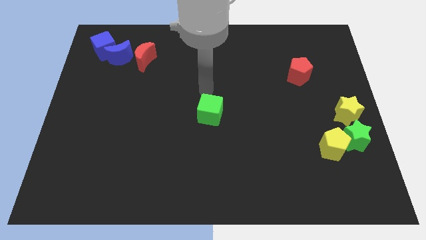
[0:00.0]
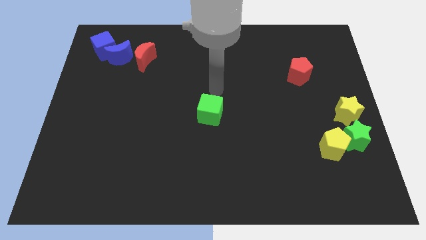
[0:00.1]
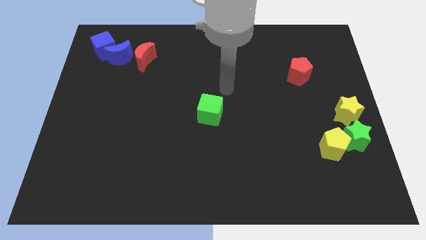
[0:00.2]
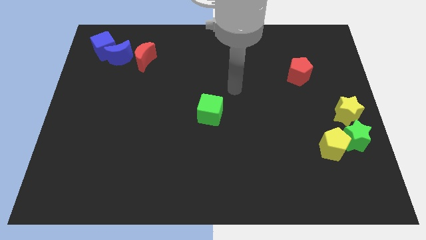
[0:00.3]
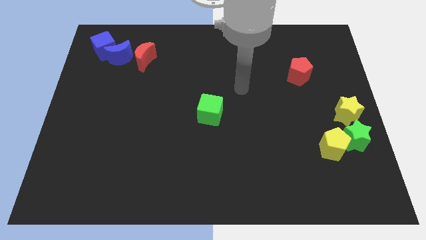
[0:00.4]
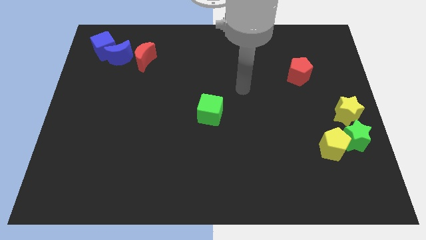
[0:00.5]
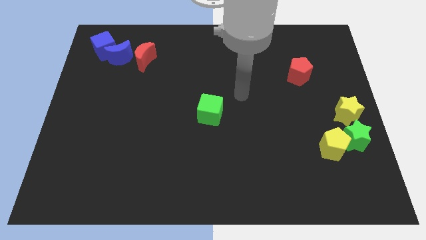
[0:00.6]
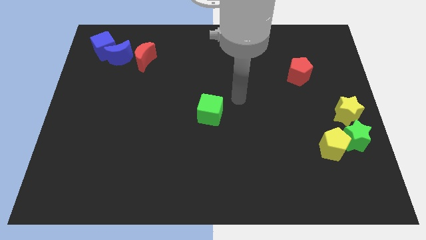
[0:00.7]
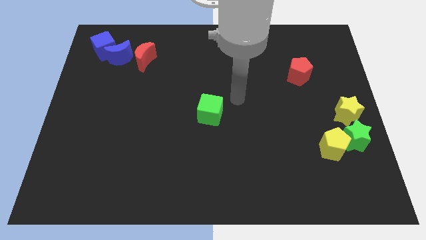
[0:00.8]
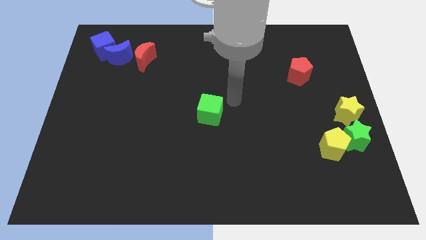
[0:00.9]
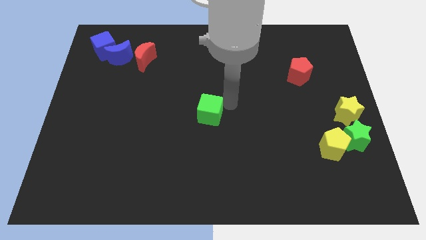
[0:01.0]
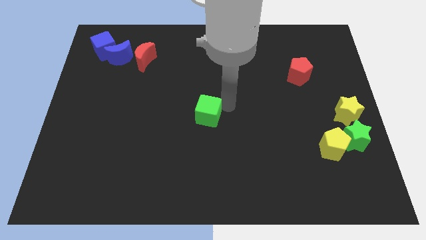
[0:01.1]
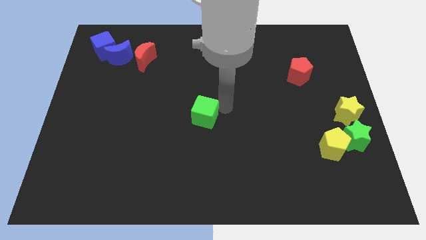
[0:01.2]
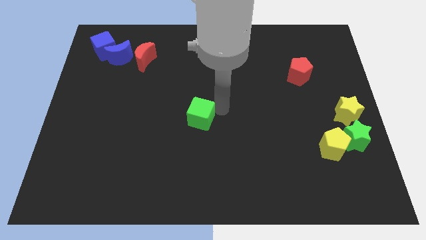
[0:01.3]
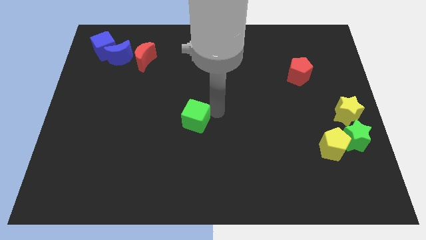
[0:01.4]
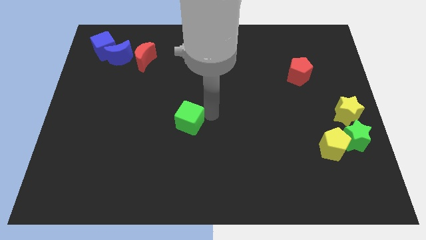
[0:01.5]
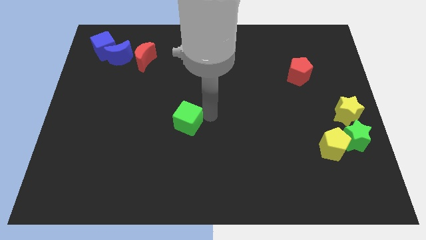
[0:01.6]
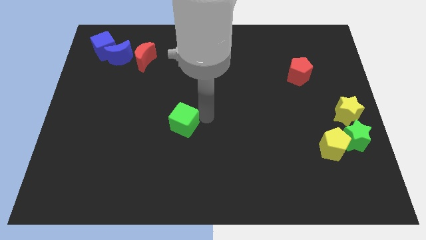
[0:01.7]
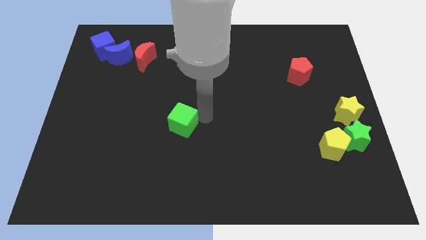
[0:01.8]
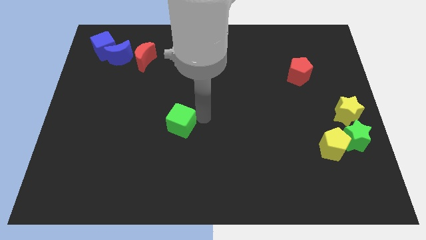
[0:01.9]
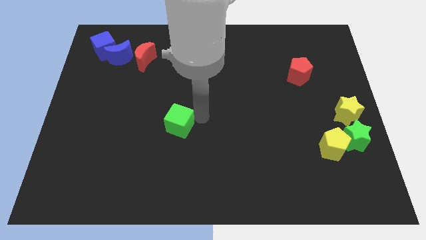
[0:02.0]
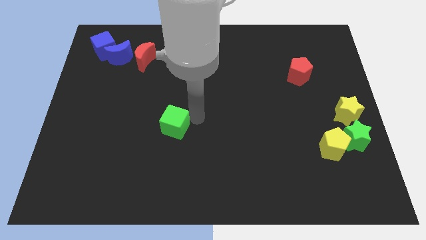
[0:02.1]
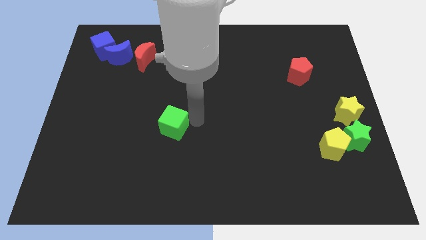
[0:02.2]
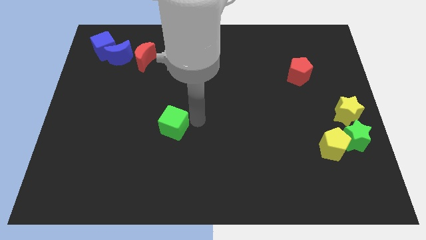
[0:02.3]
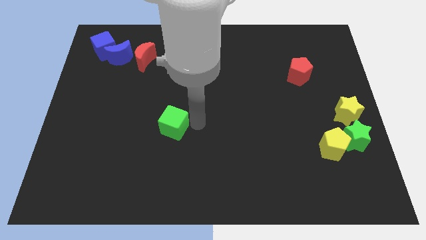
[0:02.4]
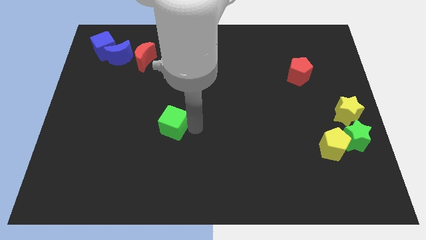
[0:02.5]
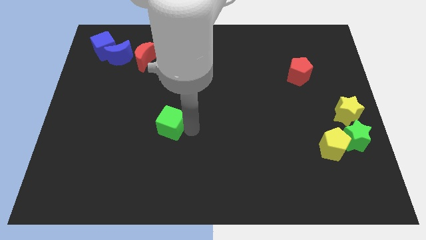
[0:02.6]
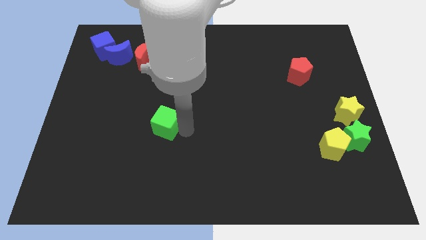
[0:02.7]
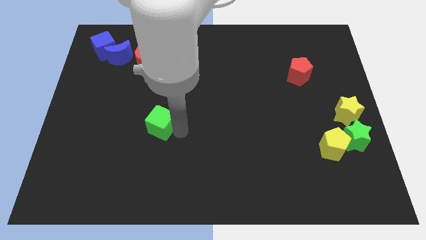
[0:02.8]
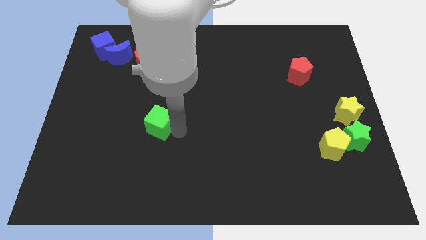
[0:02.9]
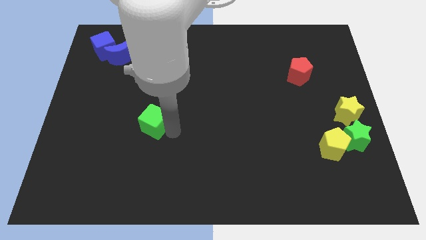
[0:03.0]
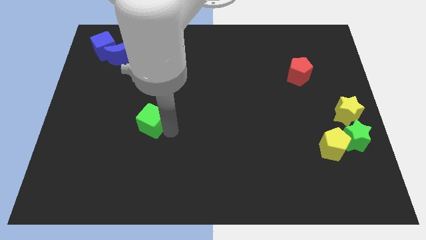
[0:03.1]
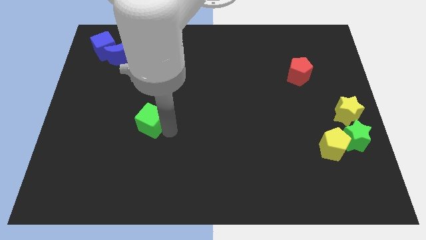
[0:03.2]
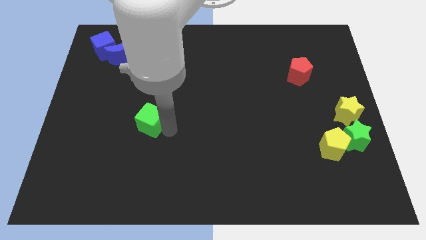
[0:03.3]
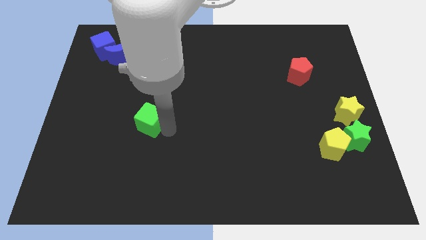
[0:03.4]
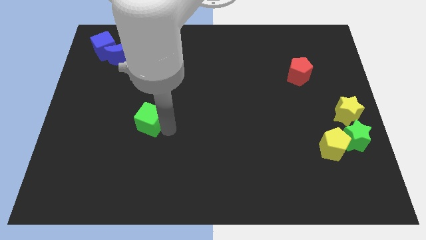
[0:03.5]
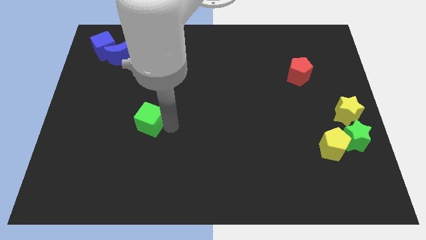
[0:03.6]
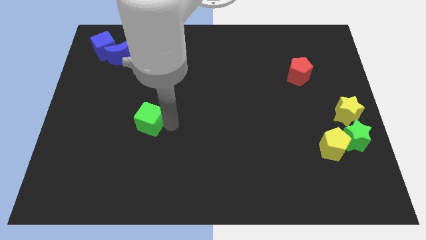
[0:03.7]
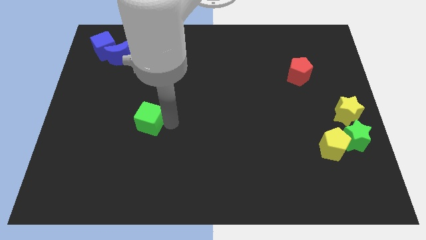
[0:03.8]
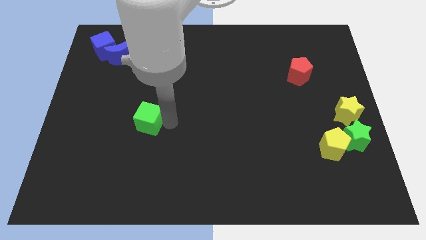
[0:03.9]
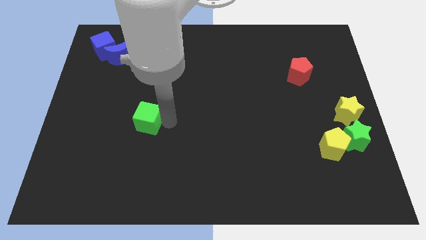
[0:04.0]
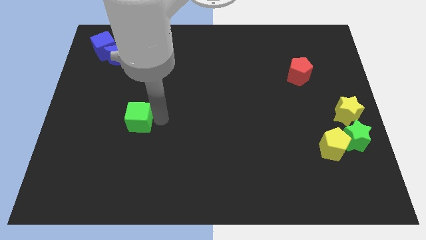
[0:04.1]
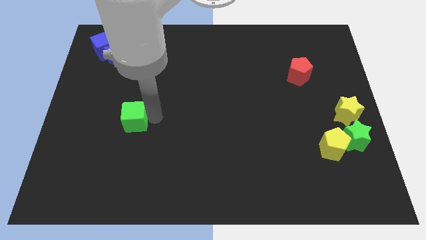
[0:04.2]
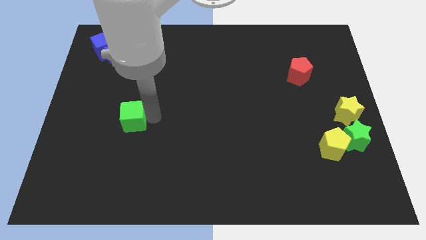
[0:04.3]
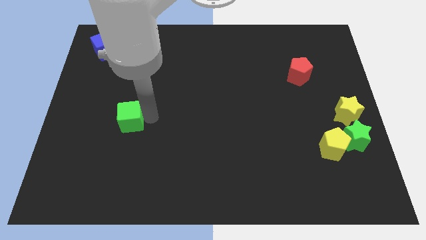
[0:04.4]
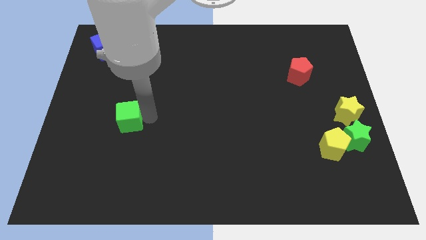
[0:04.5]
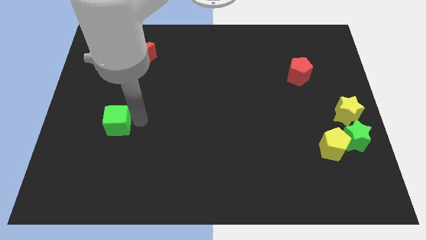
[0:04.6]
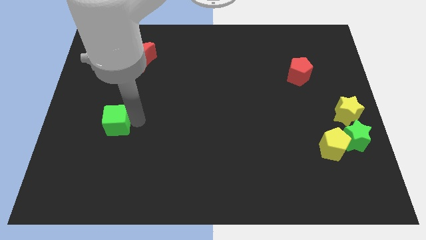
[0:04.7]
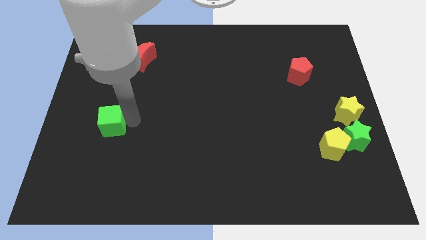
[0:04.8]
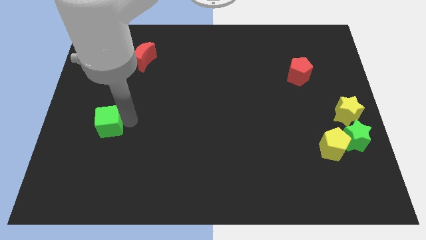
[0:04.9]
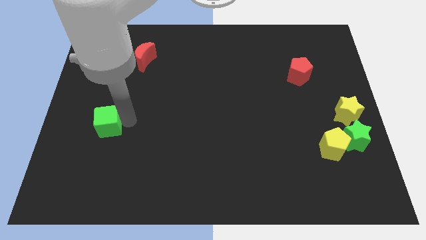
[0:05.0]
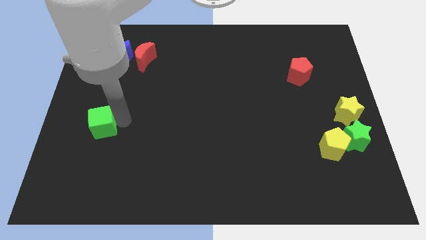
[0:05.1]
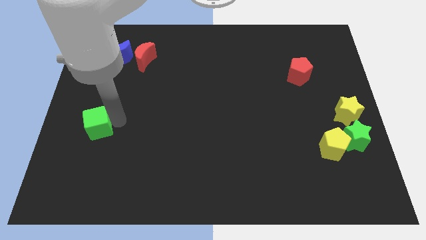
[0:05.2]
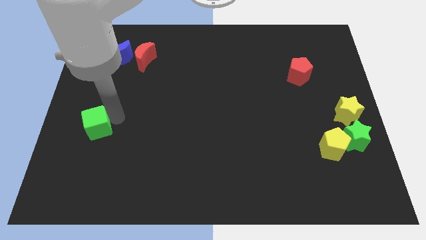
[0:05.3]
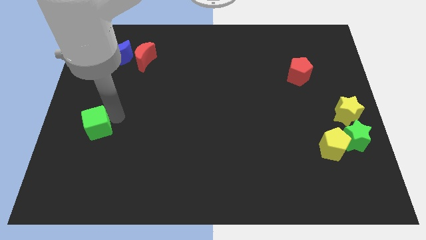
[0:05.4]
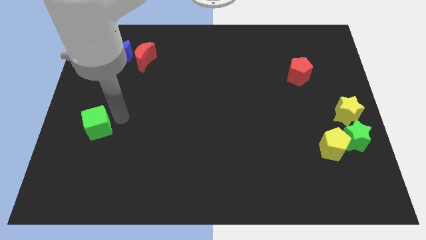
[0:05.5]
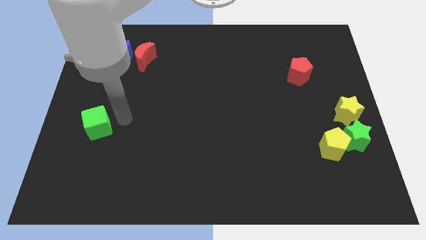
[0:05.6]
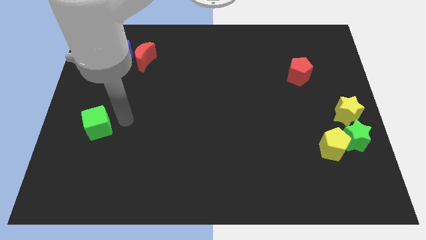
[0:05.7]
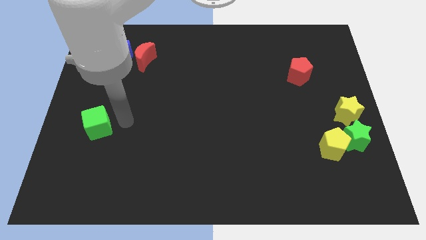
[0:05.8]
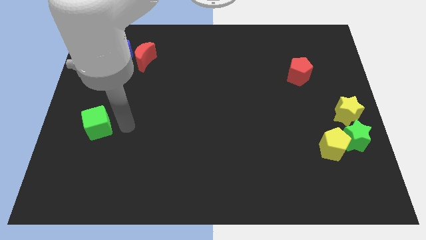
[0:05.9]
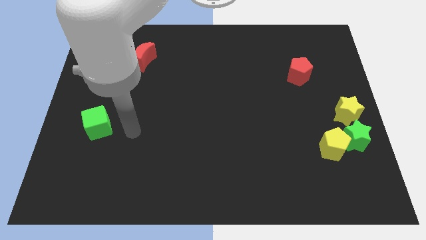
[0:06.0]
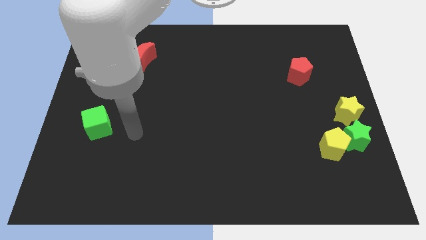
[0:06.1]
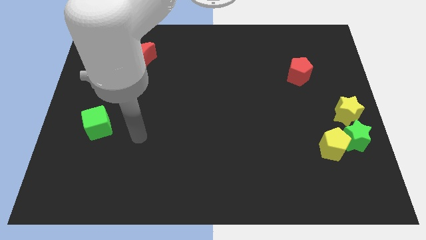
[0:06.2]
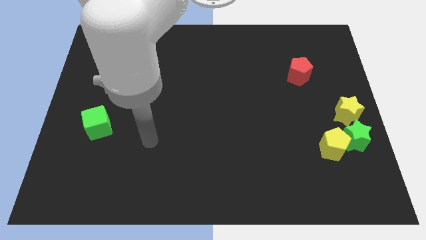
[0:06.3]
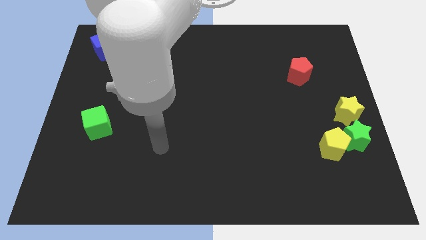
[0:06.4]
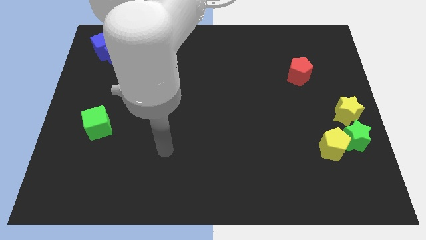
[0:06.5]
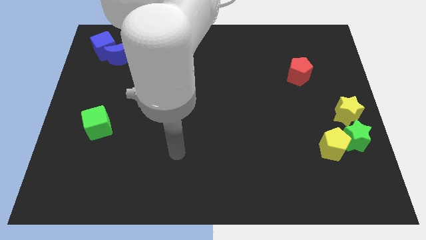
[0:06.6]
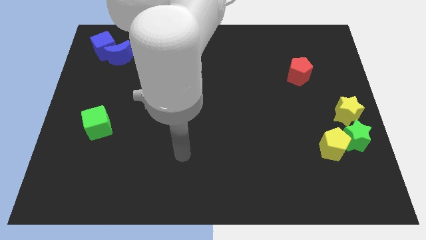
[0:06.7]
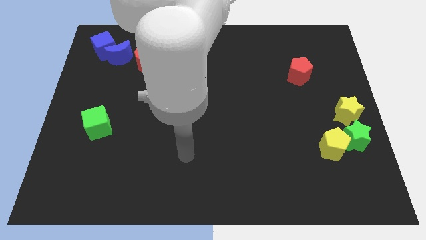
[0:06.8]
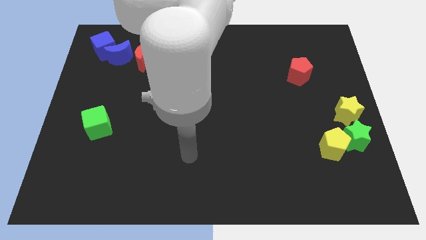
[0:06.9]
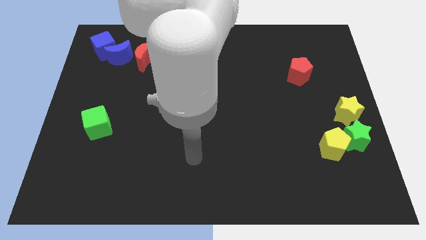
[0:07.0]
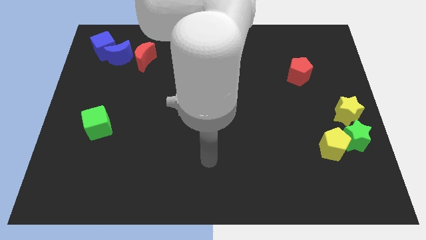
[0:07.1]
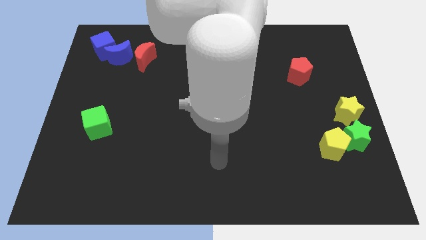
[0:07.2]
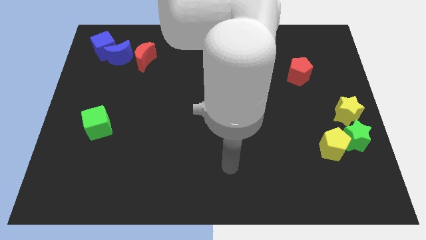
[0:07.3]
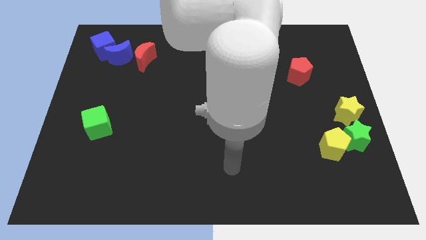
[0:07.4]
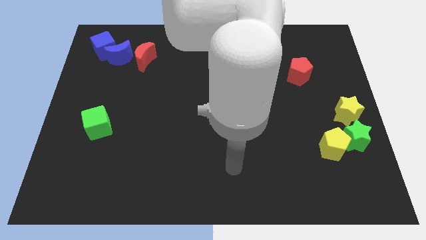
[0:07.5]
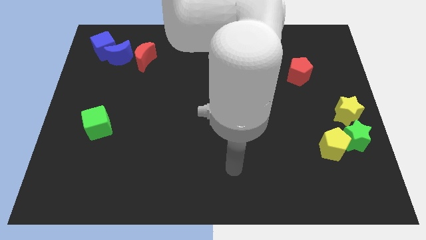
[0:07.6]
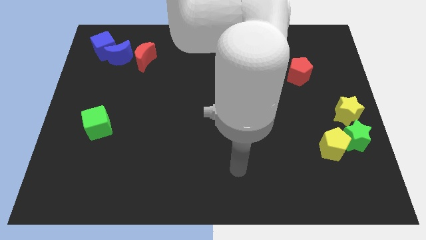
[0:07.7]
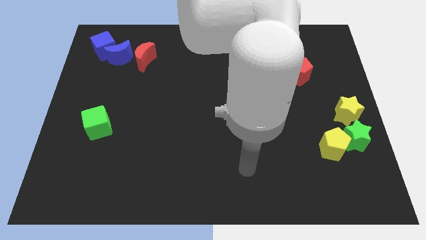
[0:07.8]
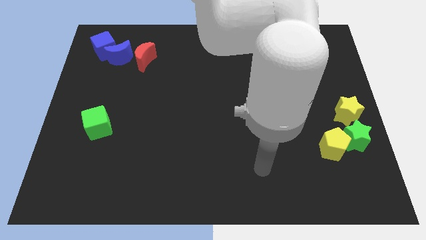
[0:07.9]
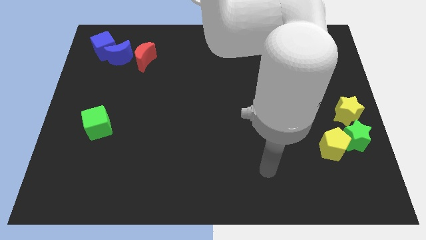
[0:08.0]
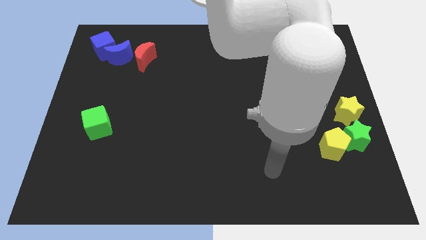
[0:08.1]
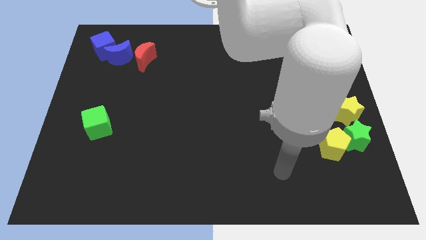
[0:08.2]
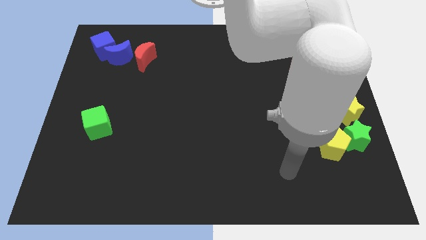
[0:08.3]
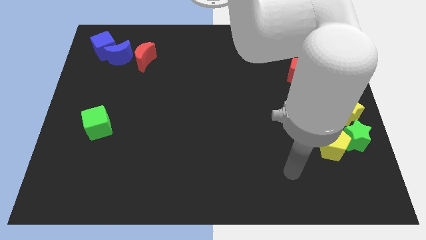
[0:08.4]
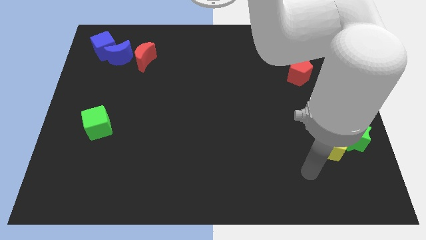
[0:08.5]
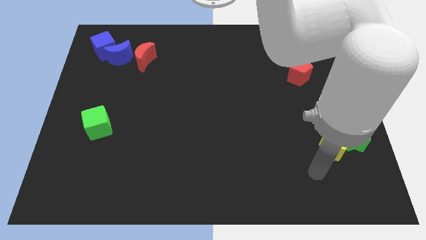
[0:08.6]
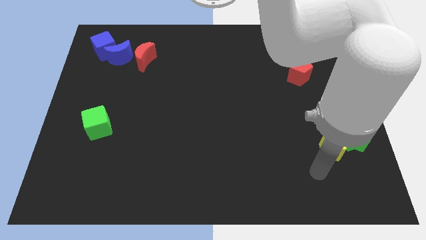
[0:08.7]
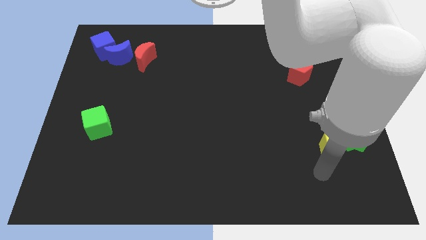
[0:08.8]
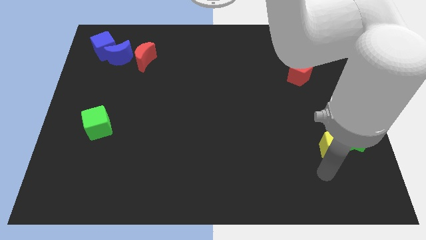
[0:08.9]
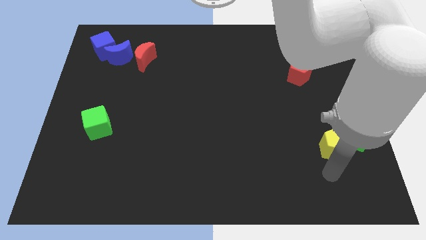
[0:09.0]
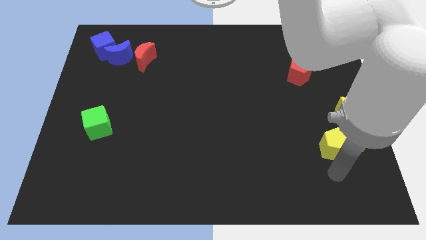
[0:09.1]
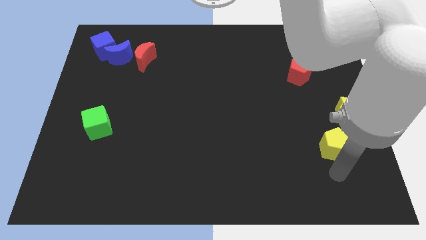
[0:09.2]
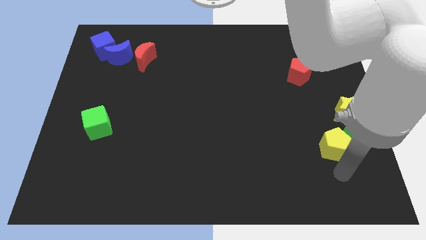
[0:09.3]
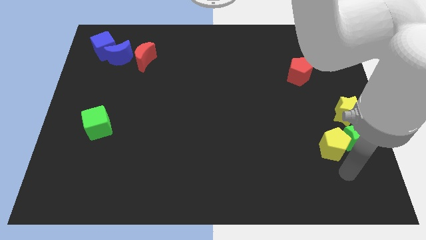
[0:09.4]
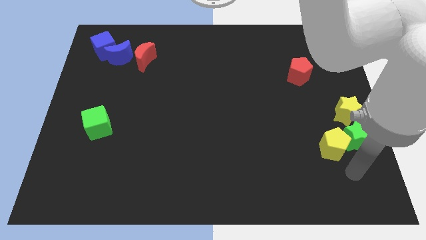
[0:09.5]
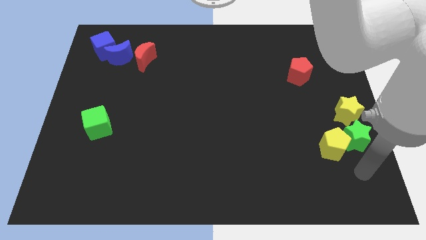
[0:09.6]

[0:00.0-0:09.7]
place the green cube below the red moon
